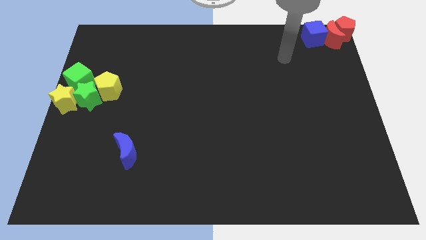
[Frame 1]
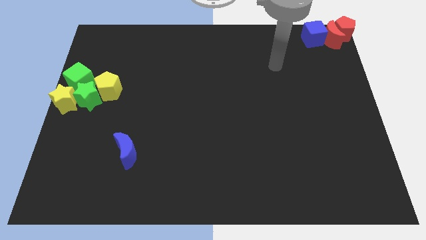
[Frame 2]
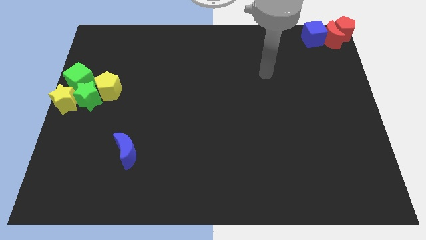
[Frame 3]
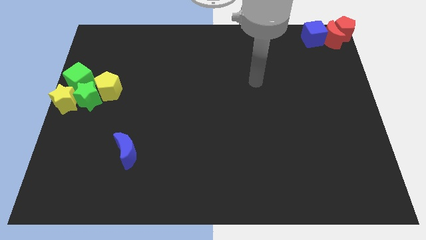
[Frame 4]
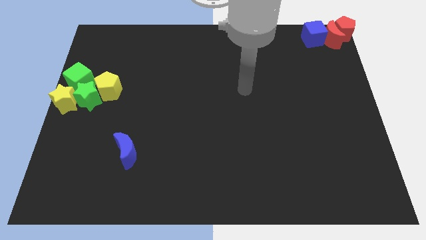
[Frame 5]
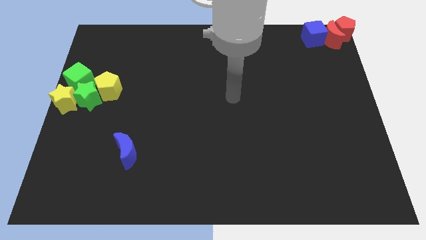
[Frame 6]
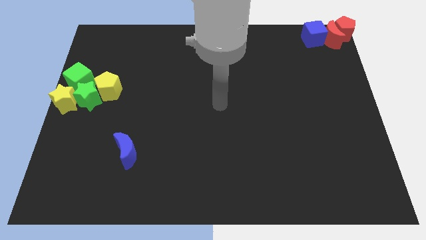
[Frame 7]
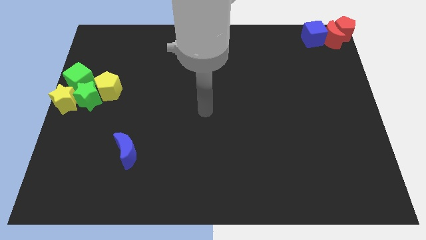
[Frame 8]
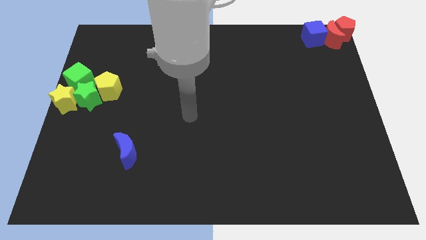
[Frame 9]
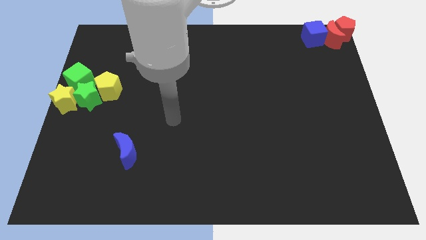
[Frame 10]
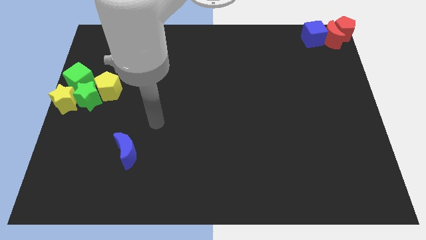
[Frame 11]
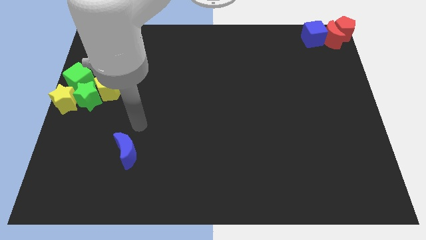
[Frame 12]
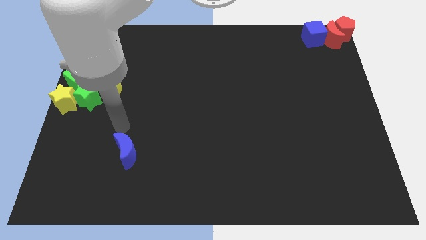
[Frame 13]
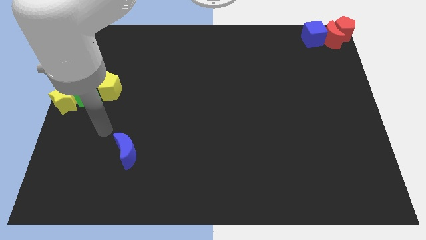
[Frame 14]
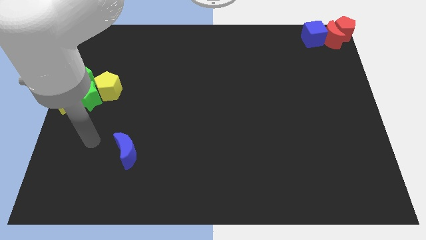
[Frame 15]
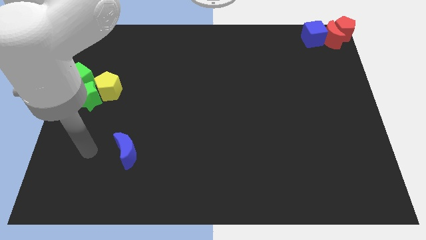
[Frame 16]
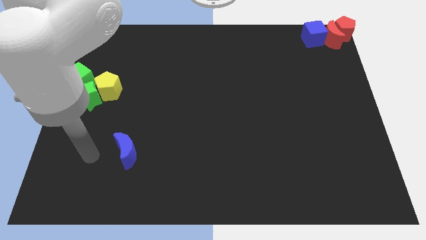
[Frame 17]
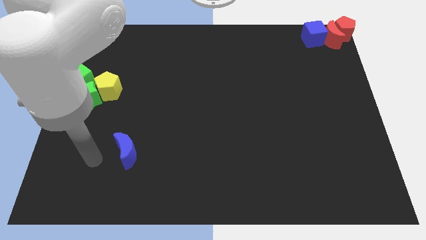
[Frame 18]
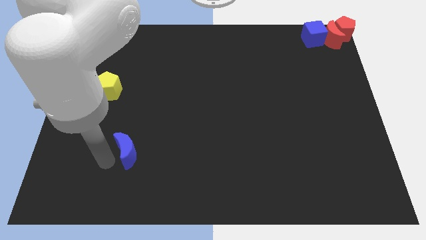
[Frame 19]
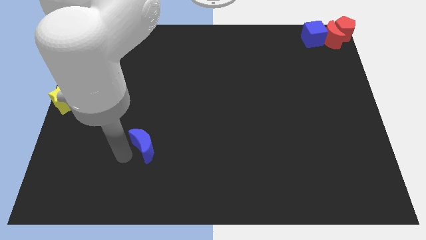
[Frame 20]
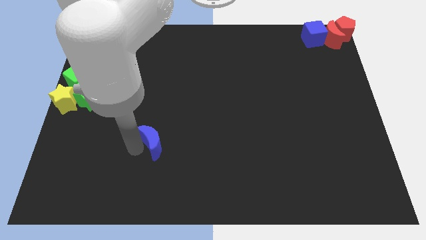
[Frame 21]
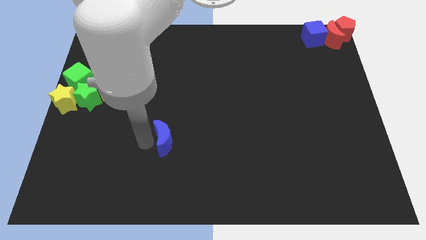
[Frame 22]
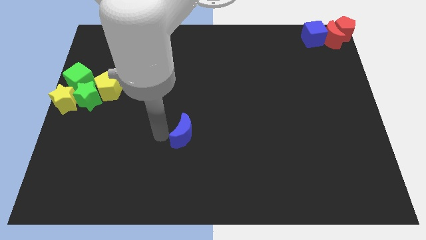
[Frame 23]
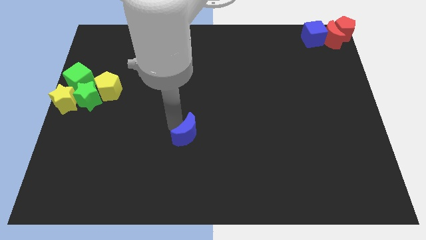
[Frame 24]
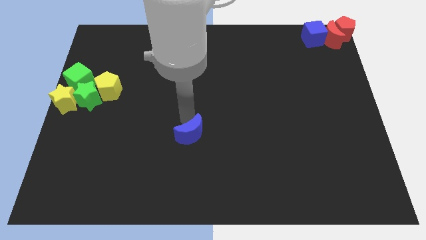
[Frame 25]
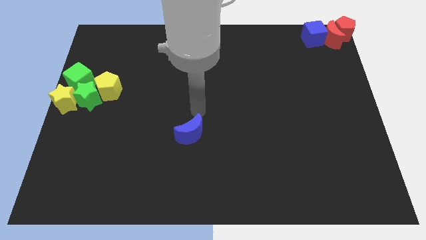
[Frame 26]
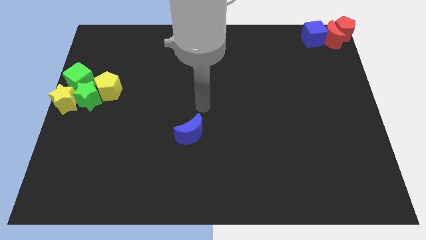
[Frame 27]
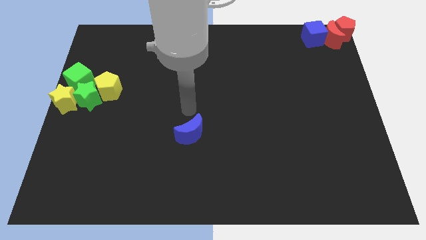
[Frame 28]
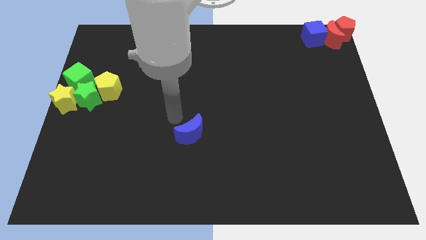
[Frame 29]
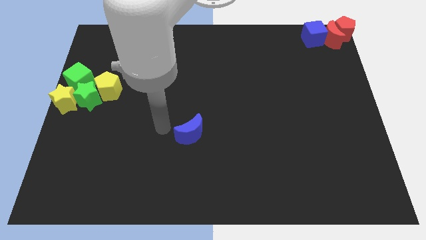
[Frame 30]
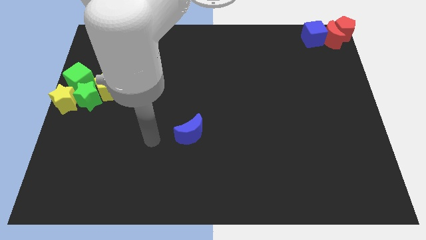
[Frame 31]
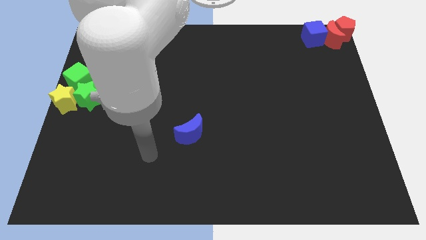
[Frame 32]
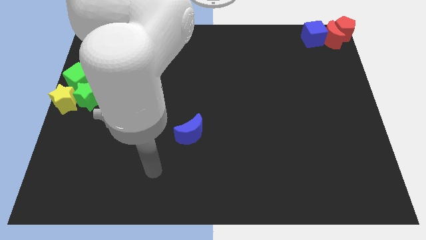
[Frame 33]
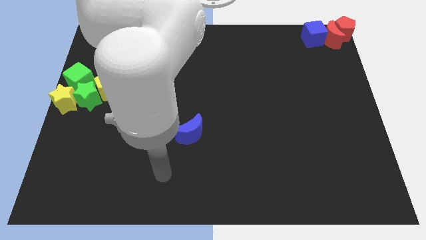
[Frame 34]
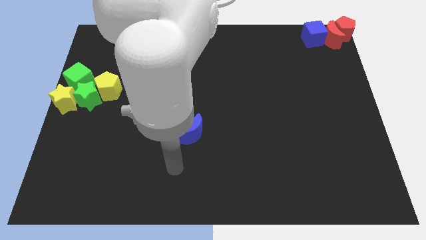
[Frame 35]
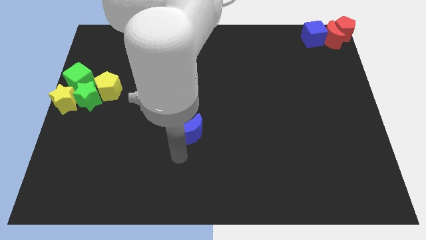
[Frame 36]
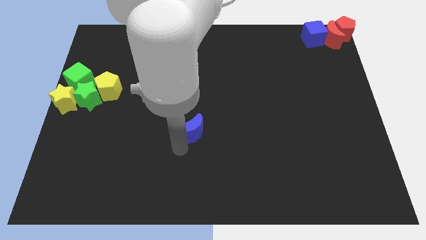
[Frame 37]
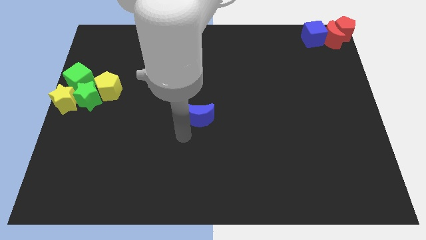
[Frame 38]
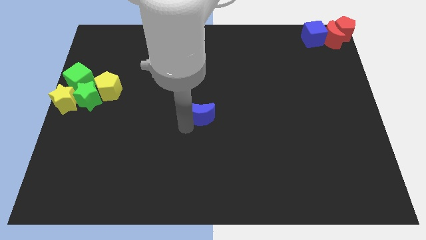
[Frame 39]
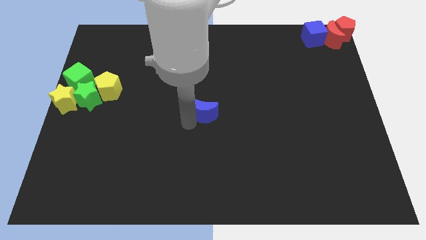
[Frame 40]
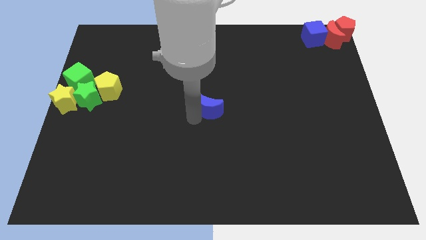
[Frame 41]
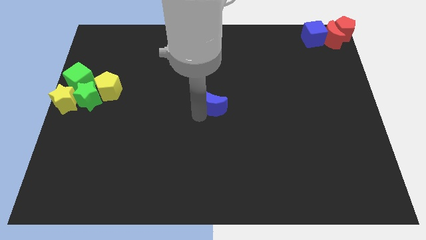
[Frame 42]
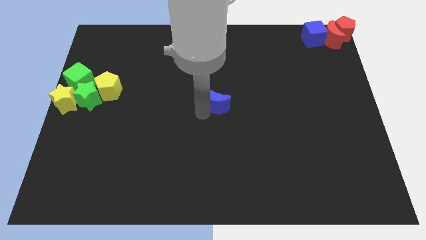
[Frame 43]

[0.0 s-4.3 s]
push the blue moon to the center of the board

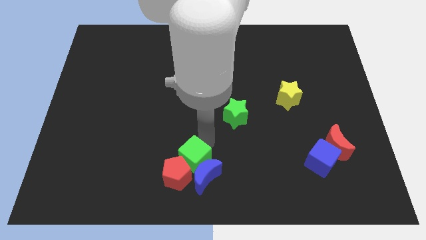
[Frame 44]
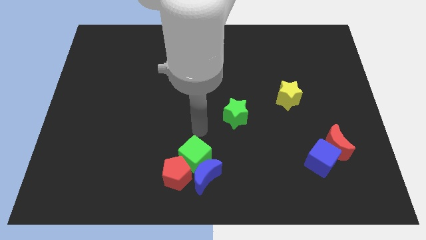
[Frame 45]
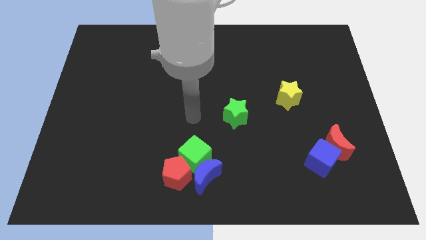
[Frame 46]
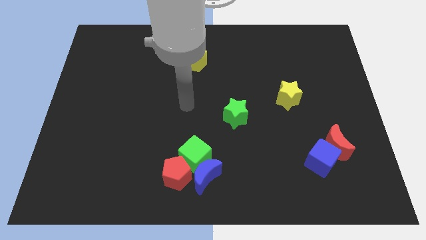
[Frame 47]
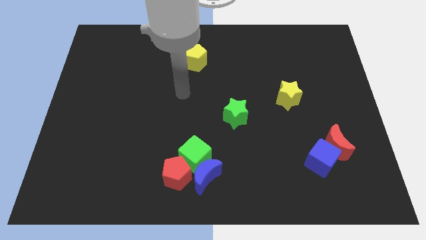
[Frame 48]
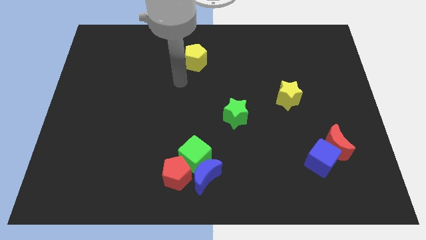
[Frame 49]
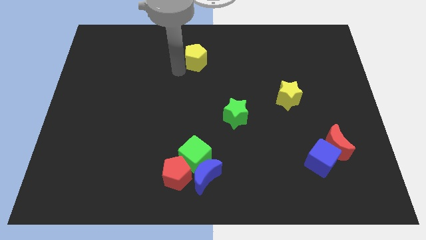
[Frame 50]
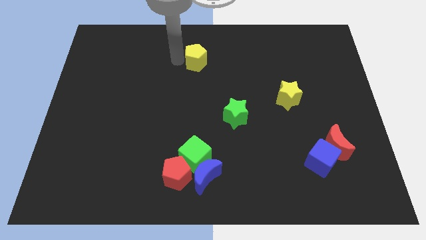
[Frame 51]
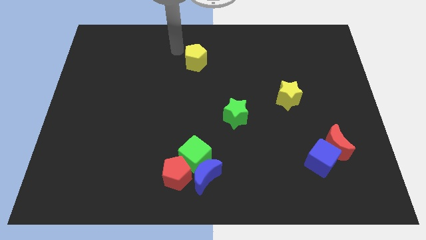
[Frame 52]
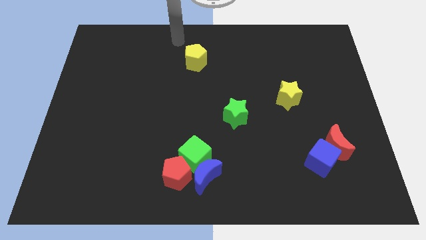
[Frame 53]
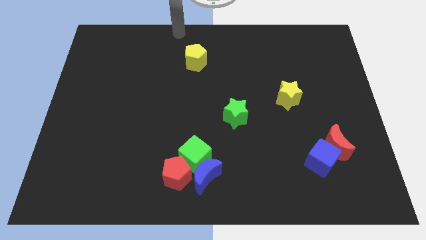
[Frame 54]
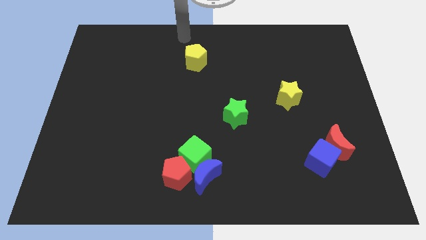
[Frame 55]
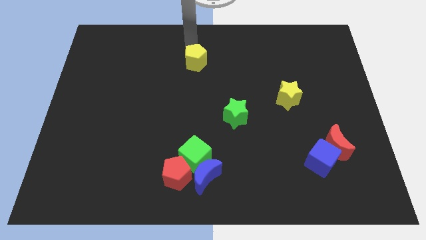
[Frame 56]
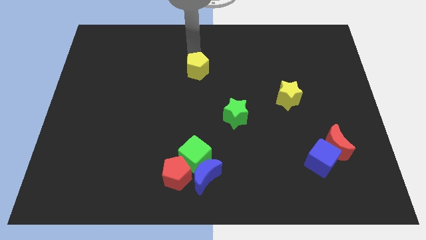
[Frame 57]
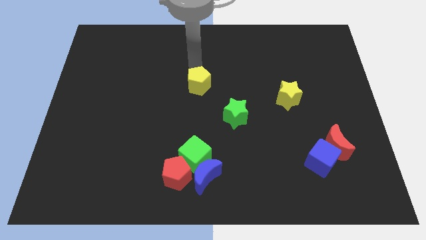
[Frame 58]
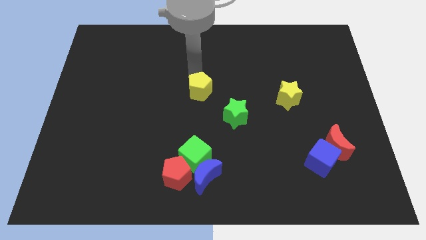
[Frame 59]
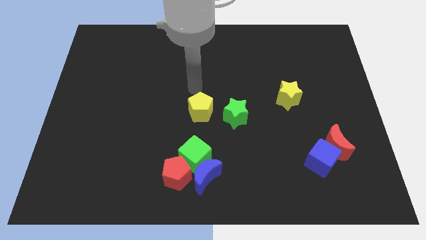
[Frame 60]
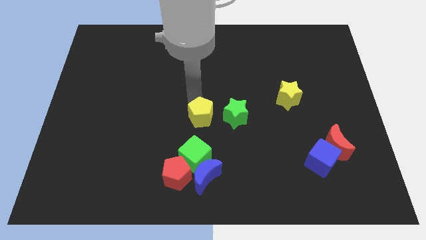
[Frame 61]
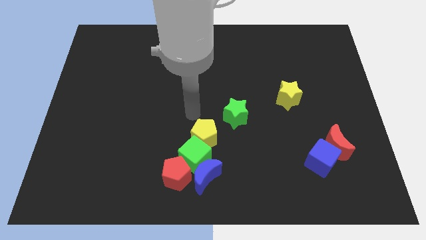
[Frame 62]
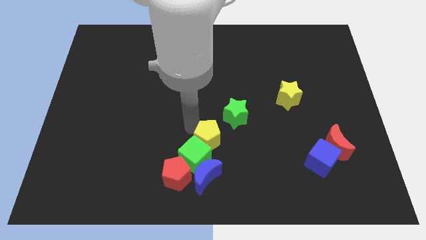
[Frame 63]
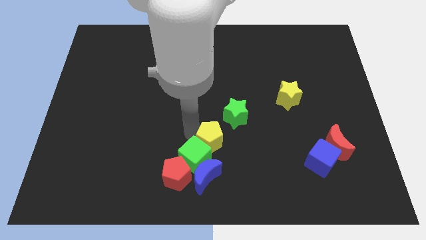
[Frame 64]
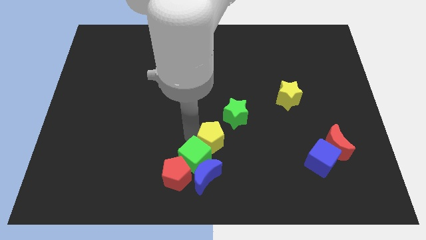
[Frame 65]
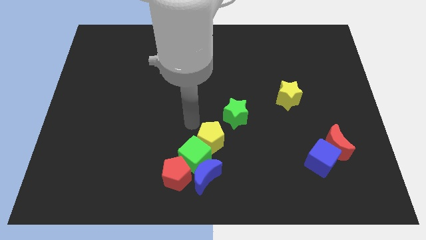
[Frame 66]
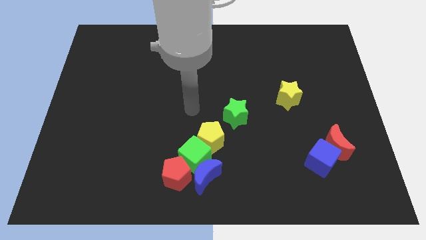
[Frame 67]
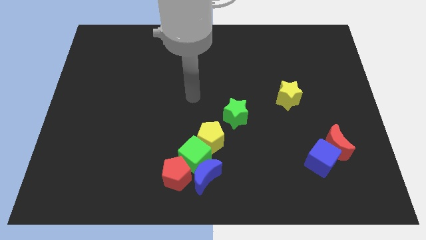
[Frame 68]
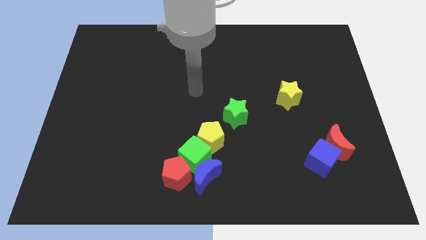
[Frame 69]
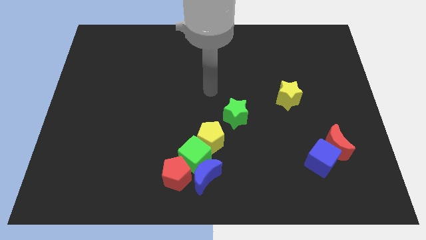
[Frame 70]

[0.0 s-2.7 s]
push yellow pentagon into the green cube

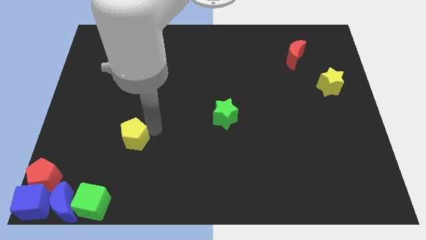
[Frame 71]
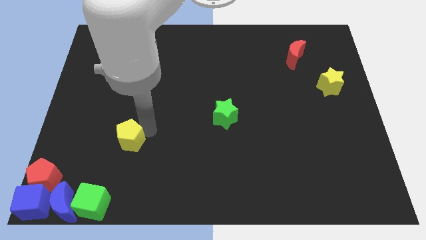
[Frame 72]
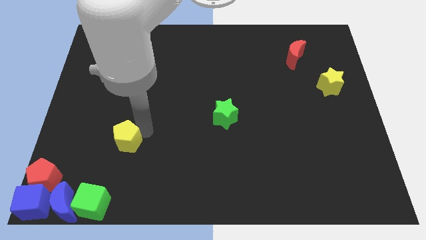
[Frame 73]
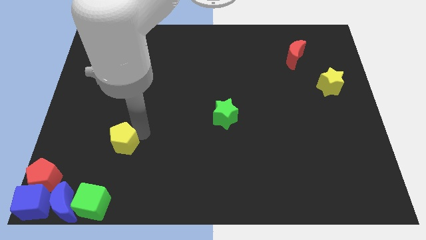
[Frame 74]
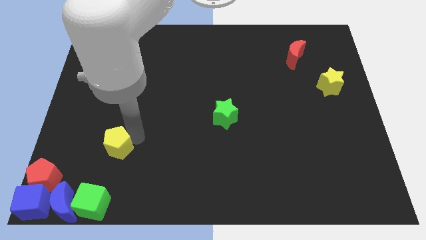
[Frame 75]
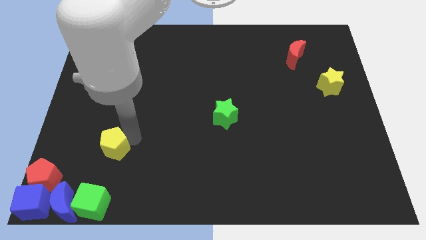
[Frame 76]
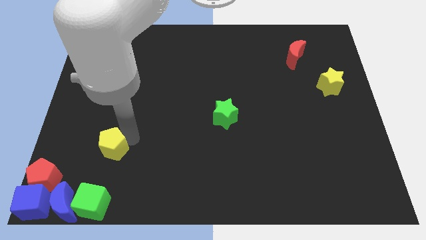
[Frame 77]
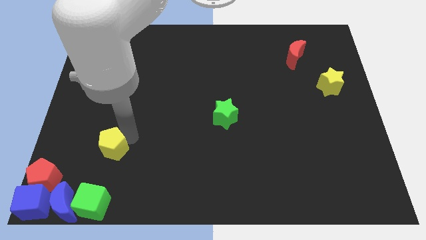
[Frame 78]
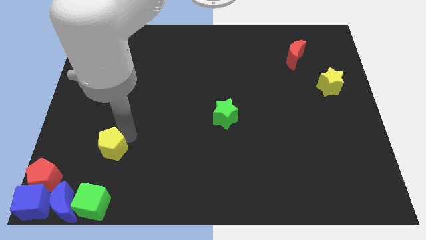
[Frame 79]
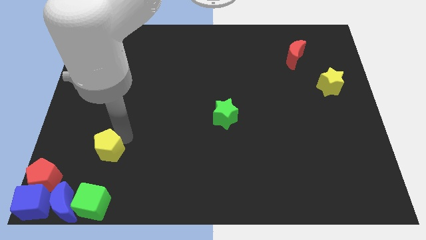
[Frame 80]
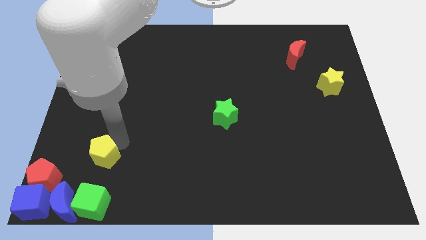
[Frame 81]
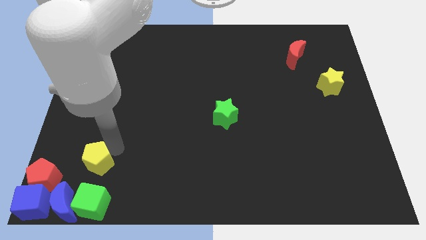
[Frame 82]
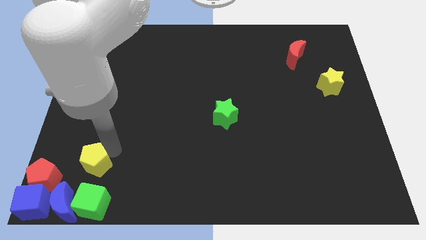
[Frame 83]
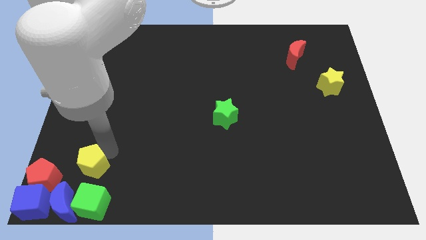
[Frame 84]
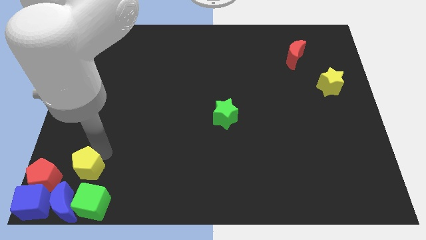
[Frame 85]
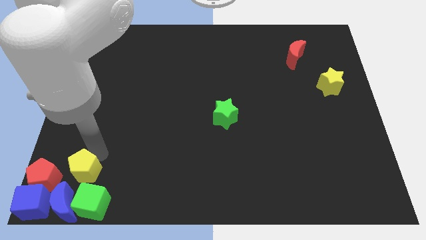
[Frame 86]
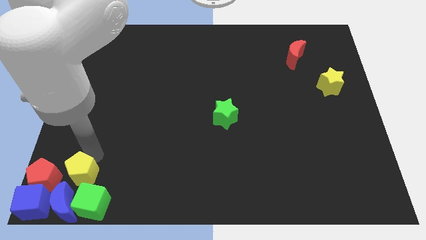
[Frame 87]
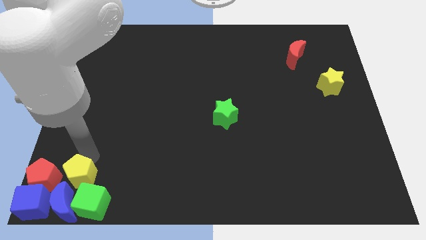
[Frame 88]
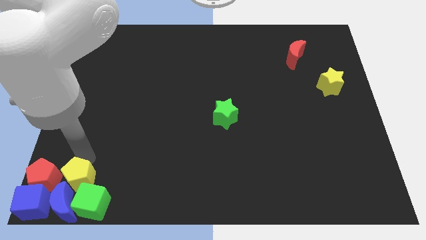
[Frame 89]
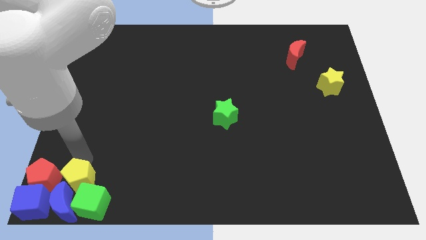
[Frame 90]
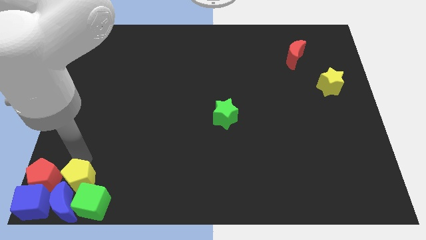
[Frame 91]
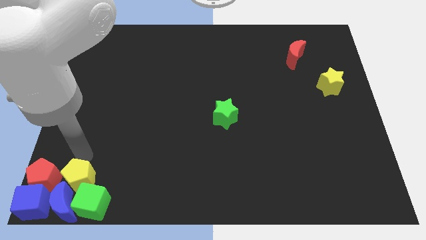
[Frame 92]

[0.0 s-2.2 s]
push the yellow pentagon into the group of blocks at the bottom side of the board
